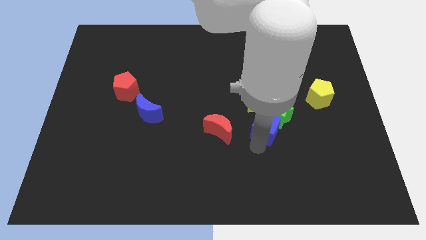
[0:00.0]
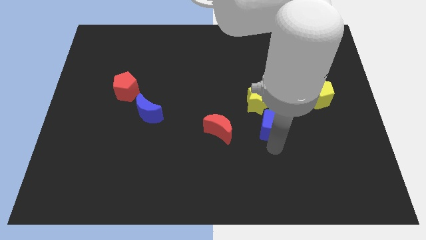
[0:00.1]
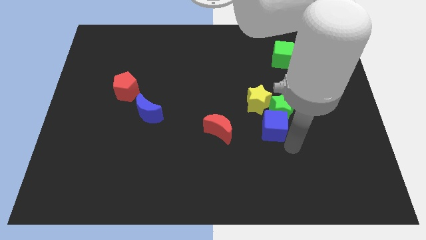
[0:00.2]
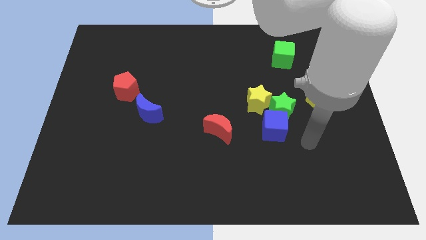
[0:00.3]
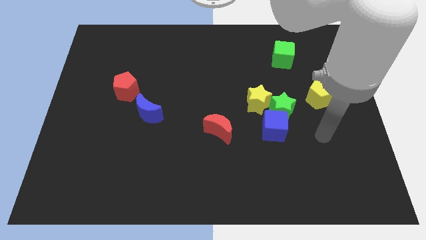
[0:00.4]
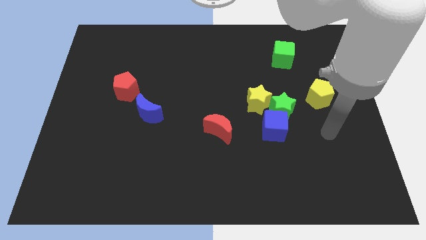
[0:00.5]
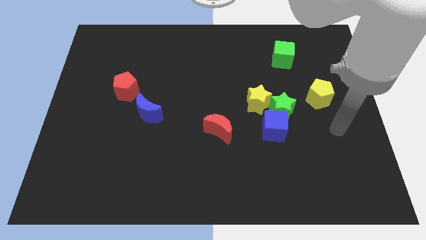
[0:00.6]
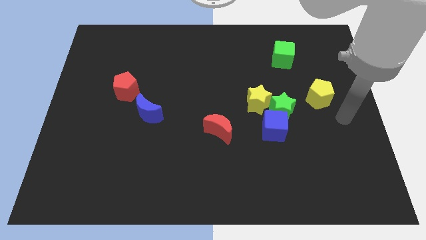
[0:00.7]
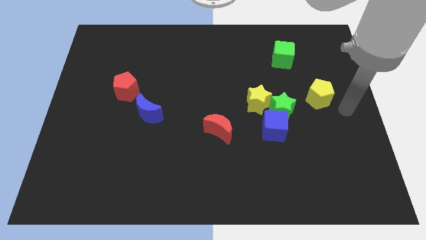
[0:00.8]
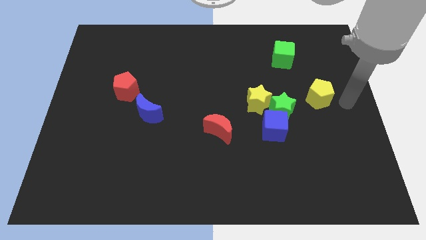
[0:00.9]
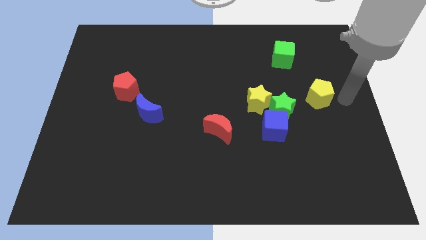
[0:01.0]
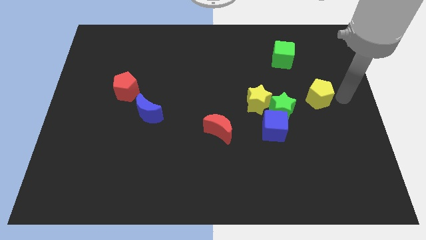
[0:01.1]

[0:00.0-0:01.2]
move your arm to the right of the yellow pentagon

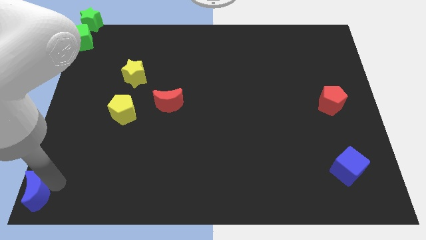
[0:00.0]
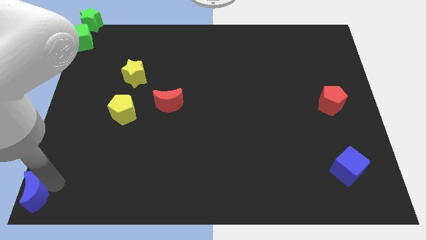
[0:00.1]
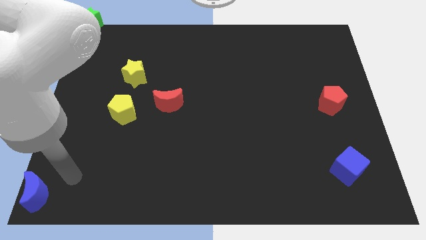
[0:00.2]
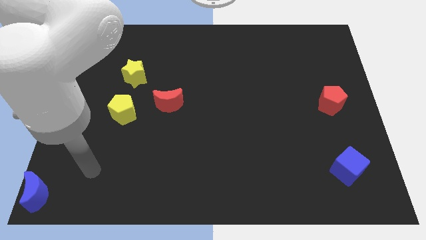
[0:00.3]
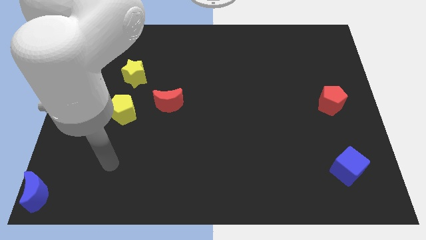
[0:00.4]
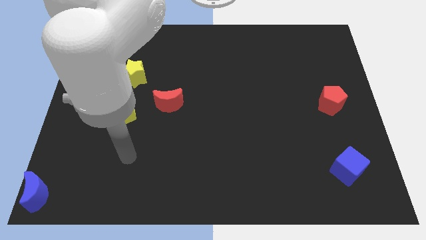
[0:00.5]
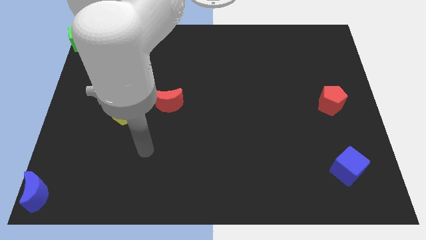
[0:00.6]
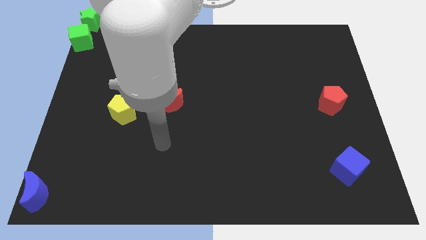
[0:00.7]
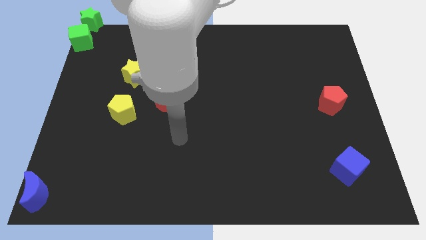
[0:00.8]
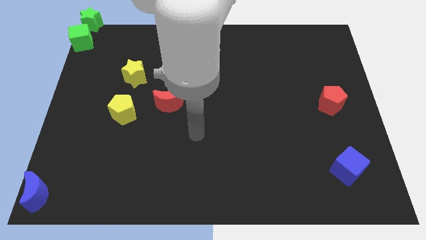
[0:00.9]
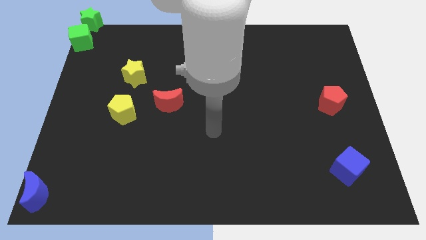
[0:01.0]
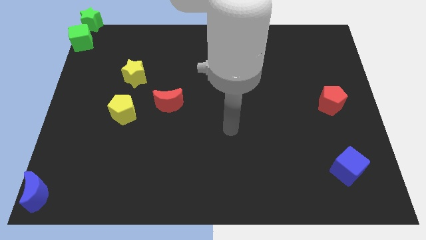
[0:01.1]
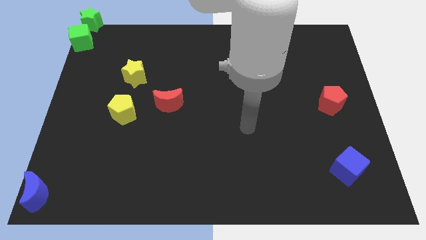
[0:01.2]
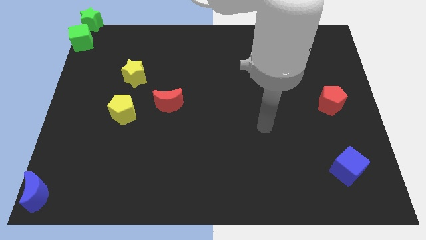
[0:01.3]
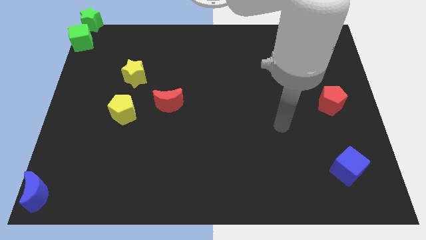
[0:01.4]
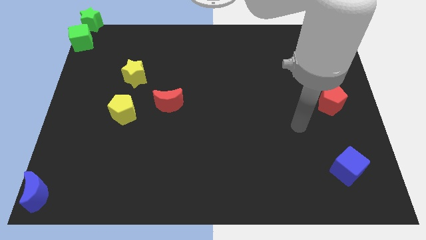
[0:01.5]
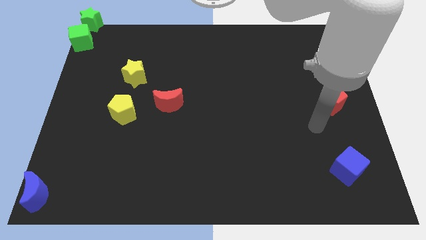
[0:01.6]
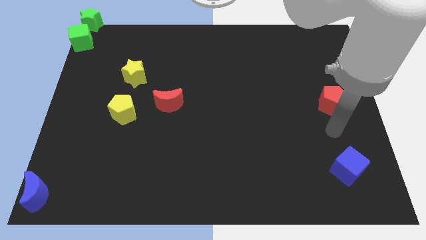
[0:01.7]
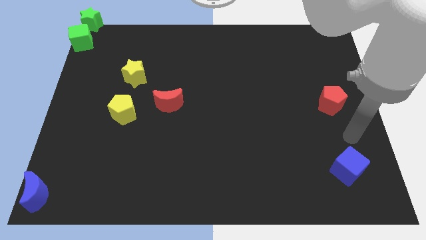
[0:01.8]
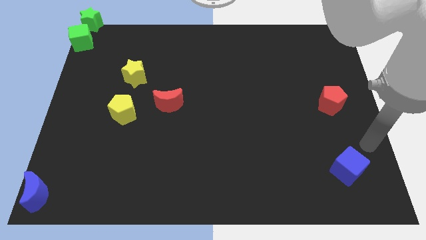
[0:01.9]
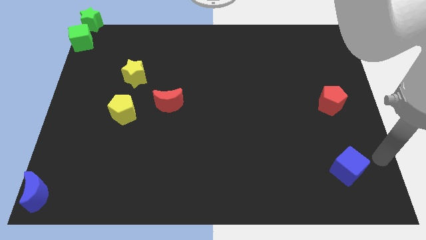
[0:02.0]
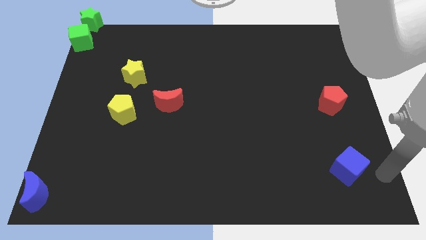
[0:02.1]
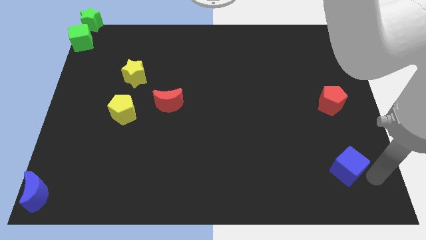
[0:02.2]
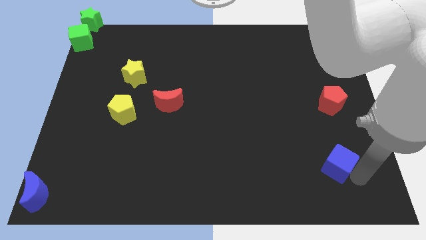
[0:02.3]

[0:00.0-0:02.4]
point your arm to the right side of blue cube

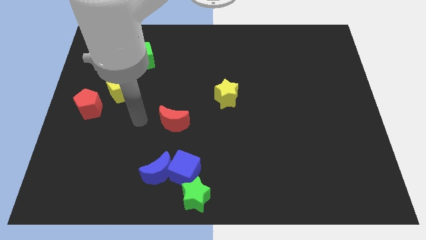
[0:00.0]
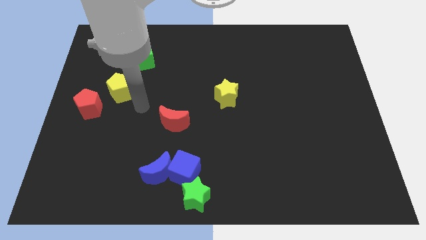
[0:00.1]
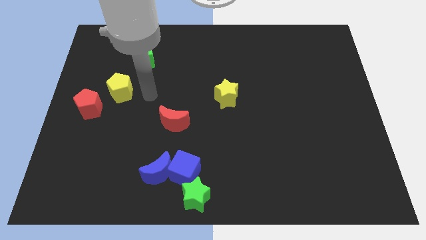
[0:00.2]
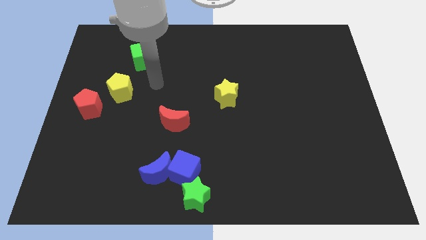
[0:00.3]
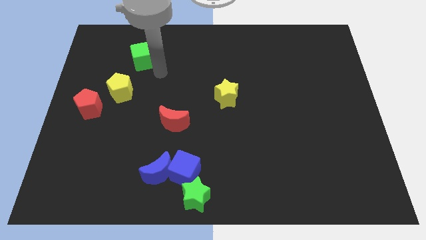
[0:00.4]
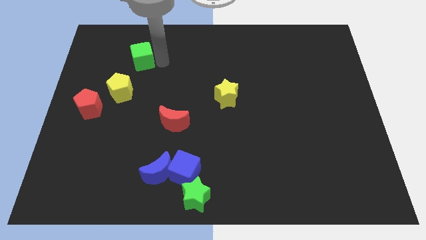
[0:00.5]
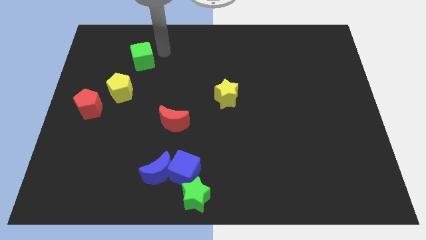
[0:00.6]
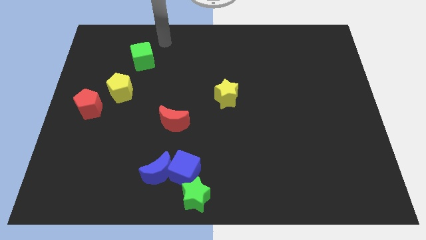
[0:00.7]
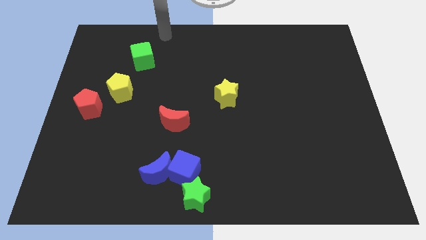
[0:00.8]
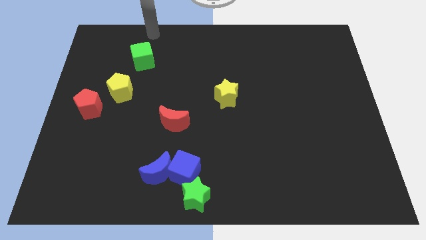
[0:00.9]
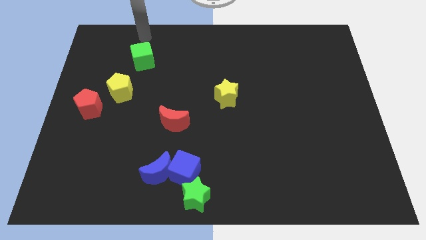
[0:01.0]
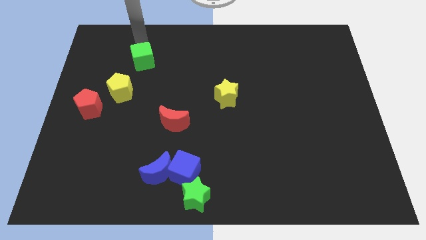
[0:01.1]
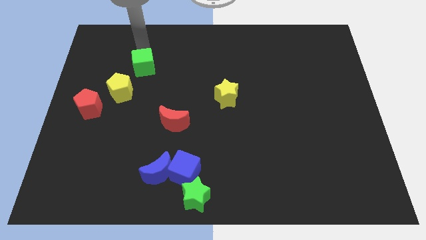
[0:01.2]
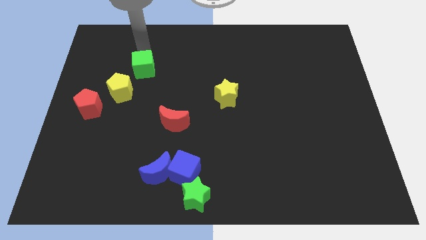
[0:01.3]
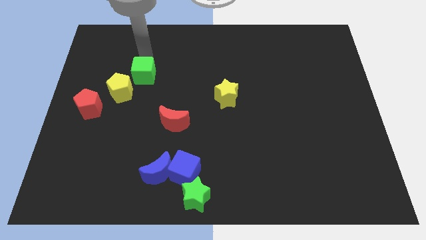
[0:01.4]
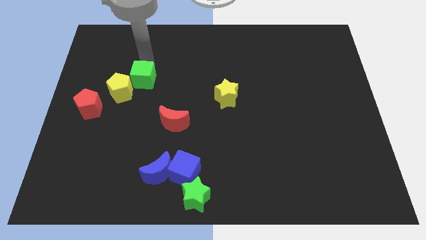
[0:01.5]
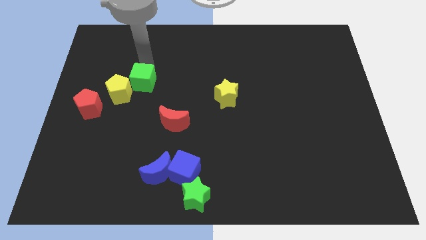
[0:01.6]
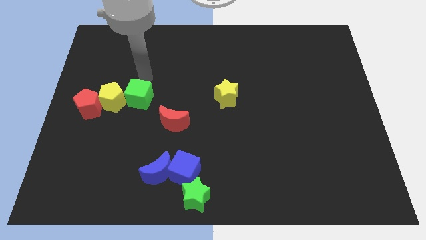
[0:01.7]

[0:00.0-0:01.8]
push the green cube to the right side of the yellow pentagon

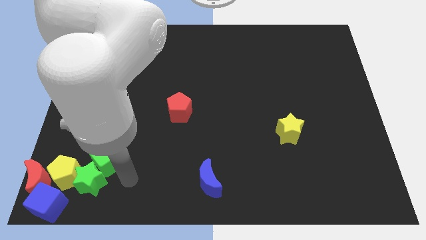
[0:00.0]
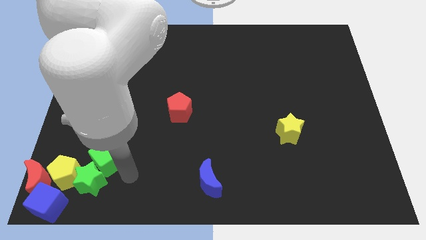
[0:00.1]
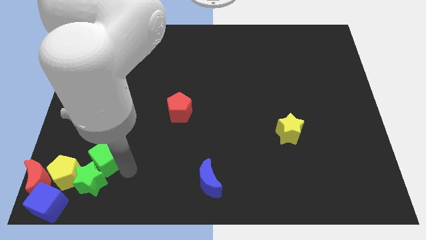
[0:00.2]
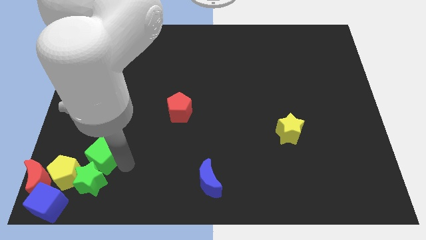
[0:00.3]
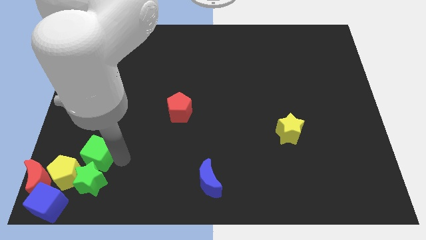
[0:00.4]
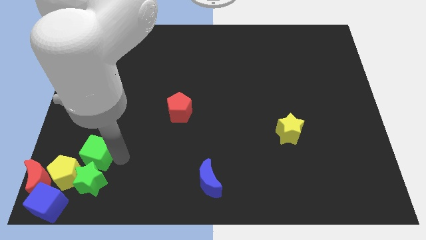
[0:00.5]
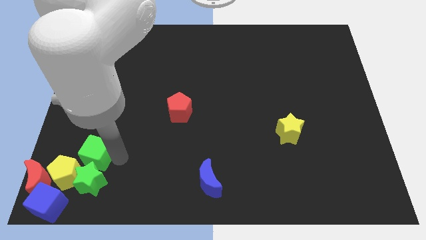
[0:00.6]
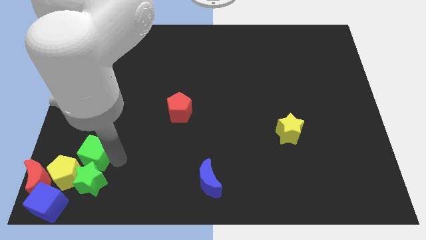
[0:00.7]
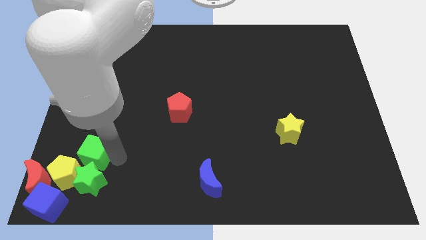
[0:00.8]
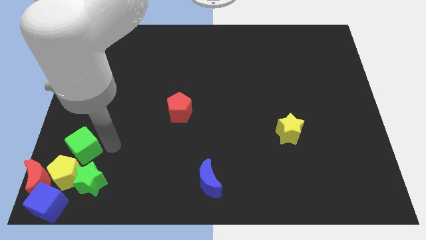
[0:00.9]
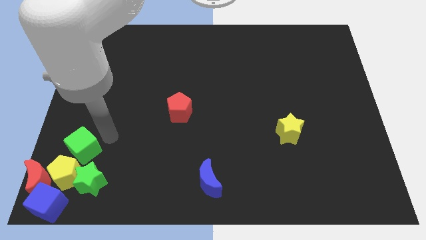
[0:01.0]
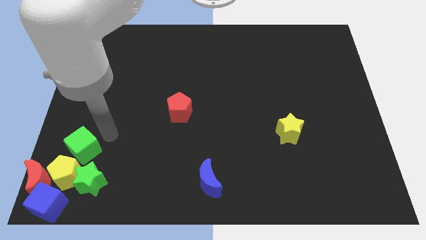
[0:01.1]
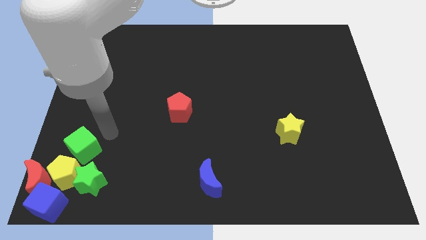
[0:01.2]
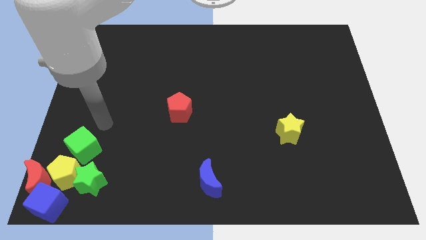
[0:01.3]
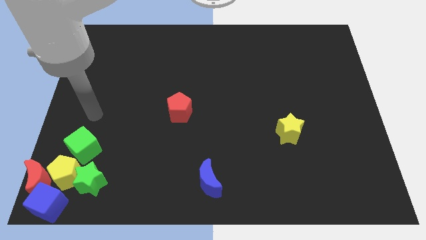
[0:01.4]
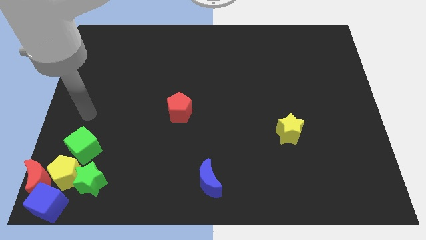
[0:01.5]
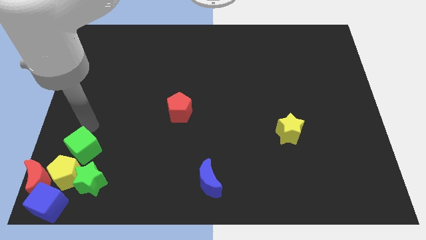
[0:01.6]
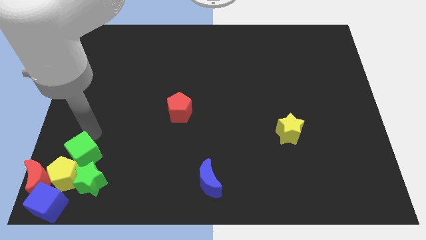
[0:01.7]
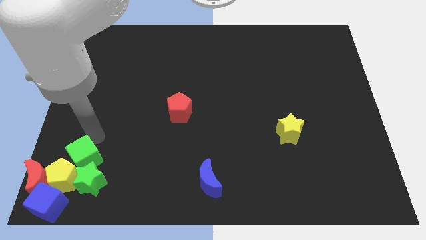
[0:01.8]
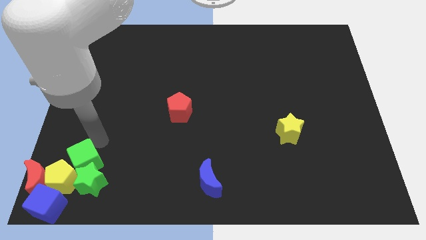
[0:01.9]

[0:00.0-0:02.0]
push the green cube towards the yellow pentagon

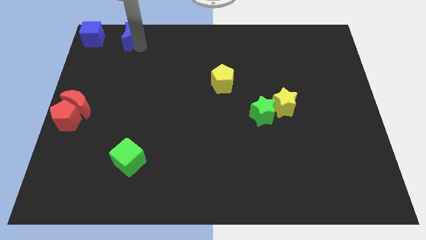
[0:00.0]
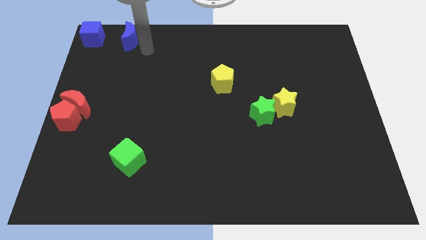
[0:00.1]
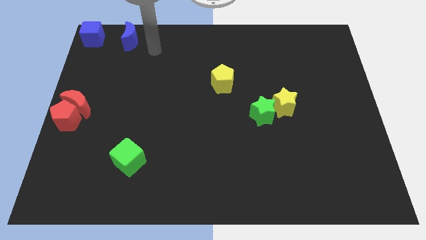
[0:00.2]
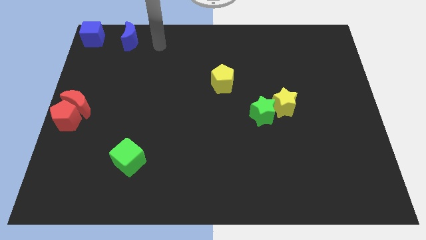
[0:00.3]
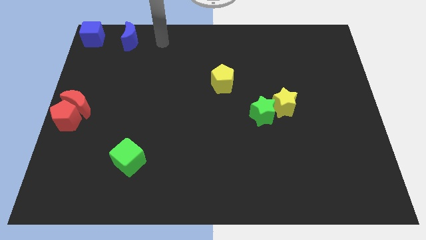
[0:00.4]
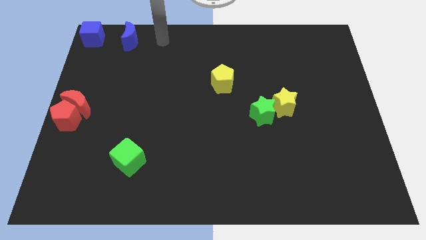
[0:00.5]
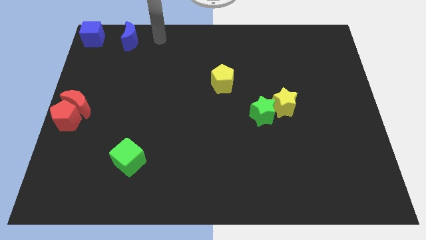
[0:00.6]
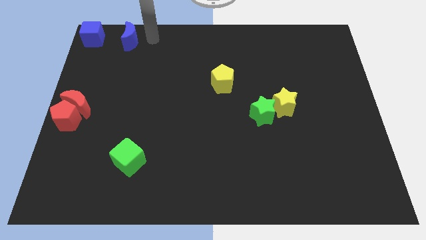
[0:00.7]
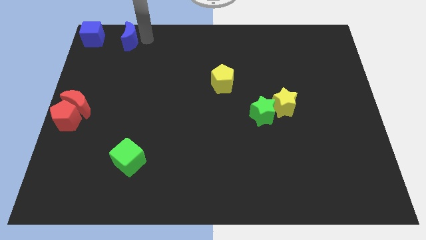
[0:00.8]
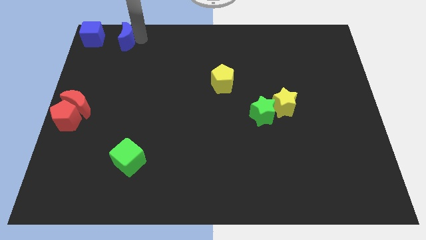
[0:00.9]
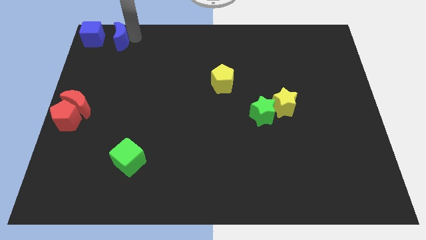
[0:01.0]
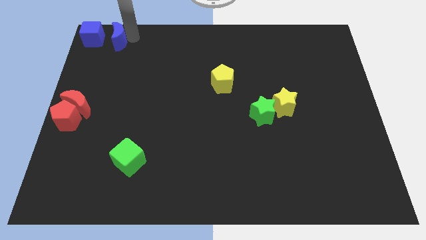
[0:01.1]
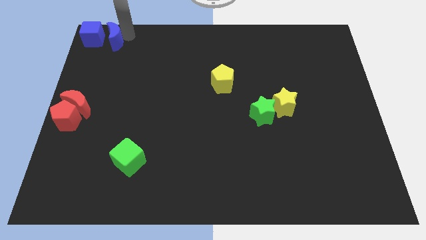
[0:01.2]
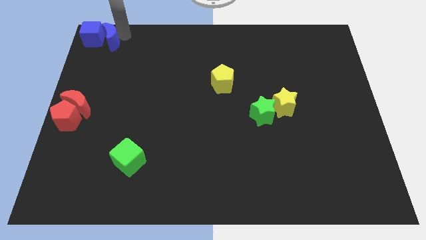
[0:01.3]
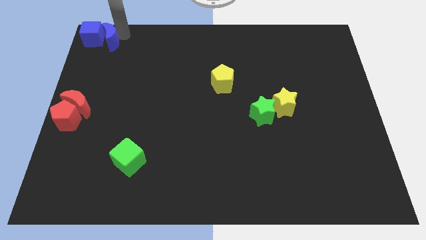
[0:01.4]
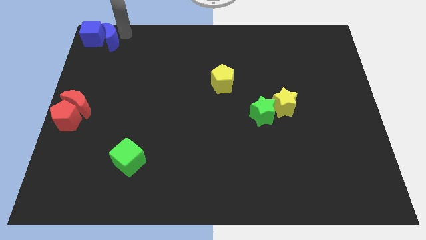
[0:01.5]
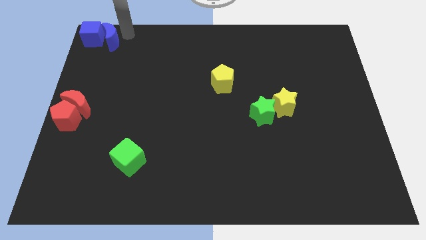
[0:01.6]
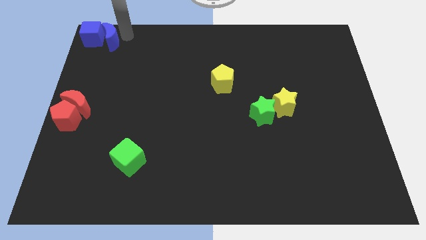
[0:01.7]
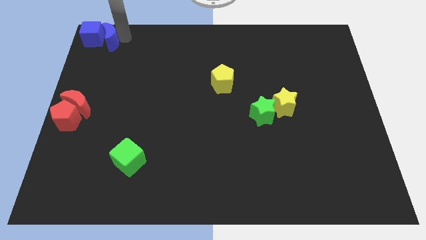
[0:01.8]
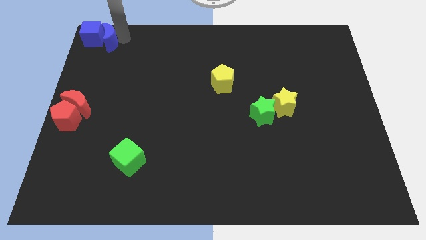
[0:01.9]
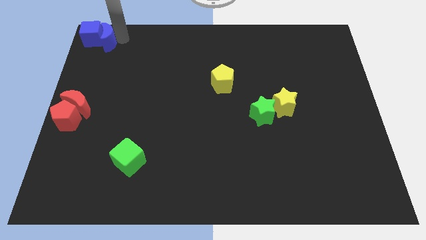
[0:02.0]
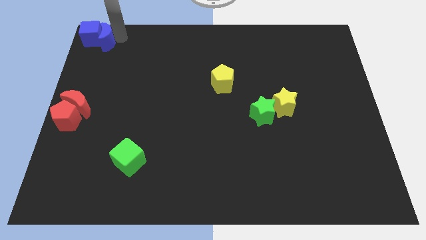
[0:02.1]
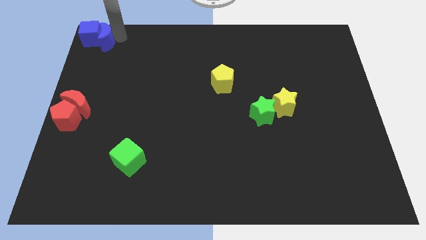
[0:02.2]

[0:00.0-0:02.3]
push the blue moon into the blue cube
